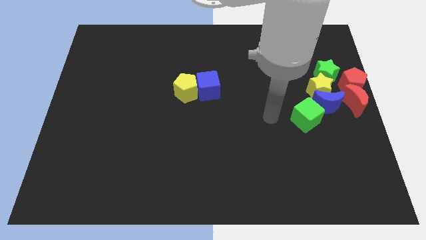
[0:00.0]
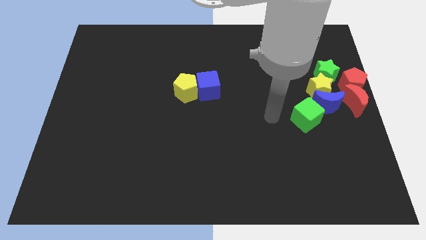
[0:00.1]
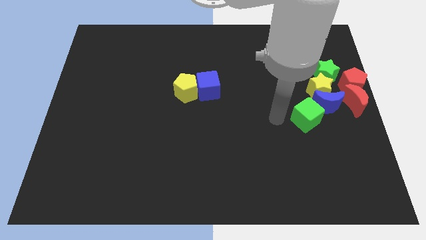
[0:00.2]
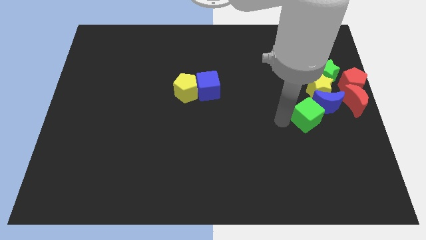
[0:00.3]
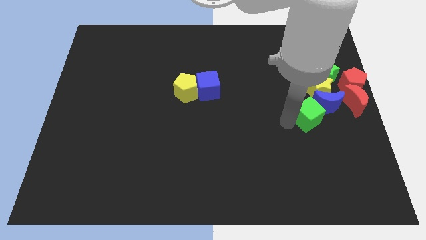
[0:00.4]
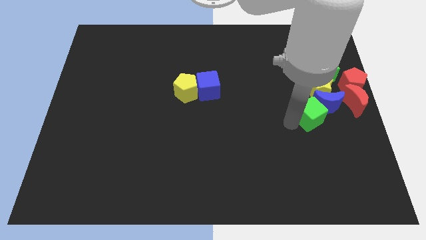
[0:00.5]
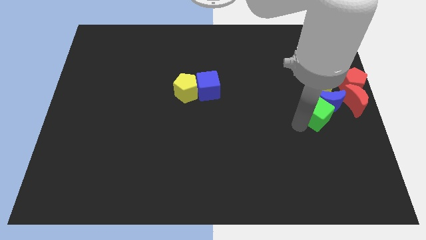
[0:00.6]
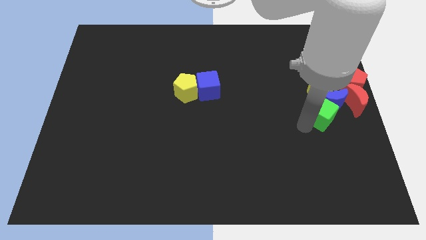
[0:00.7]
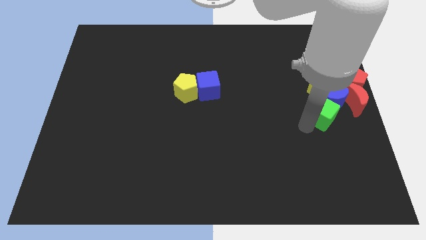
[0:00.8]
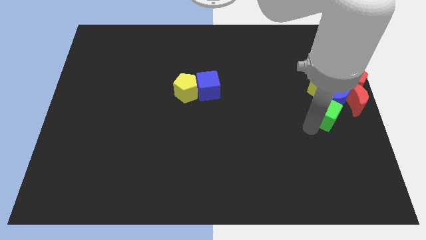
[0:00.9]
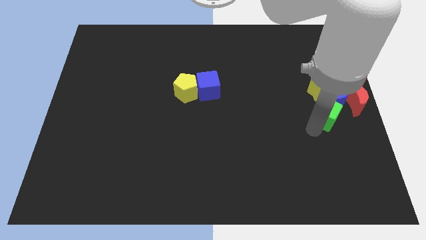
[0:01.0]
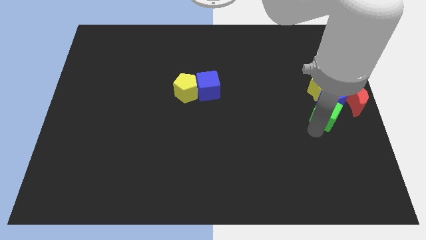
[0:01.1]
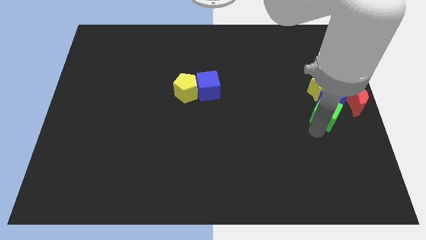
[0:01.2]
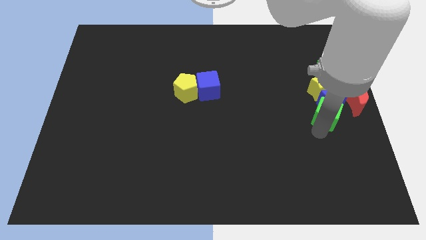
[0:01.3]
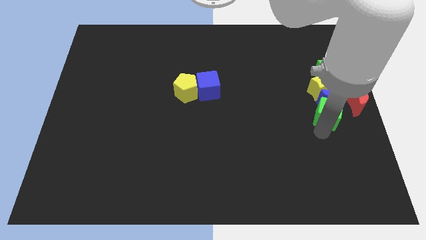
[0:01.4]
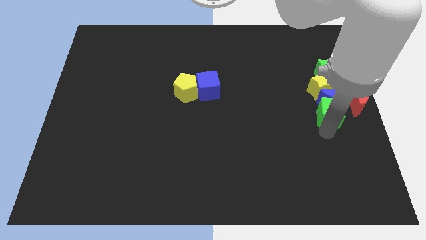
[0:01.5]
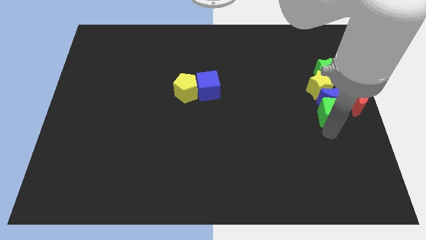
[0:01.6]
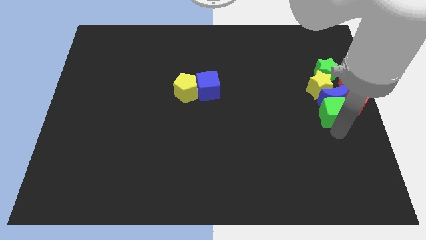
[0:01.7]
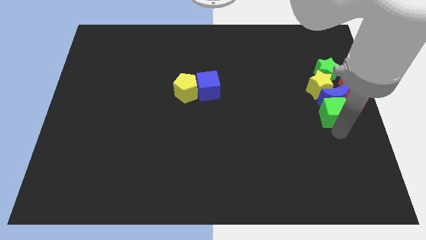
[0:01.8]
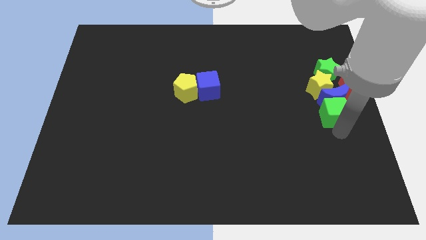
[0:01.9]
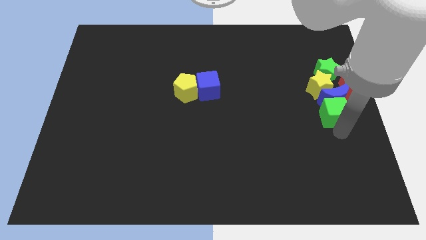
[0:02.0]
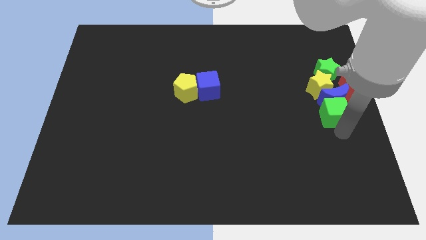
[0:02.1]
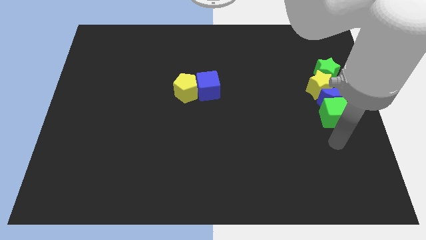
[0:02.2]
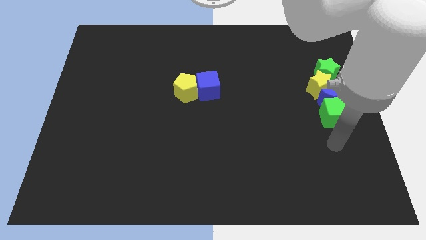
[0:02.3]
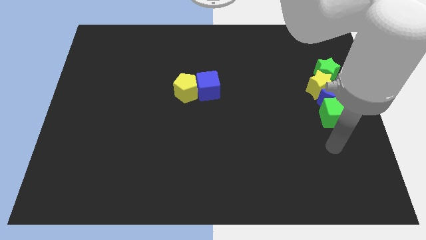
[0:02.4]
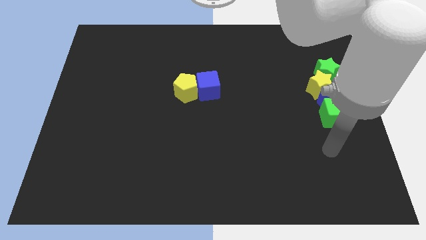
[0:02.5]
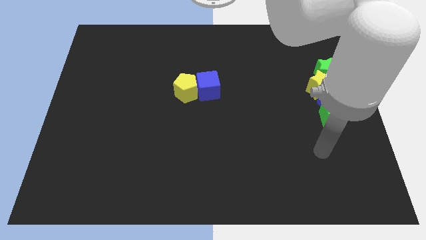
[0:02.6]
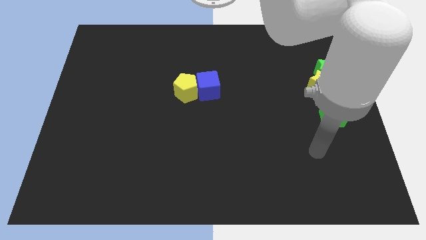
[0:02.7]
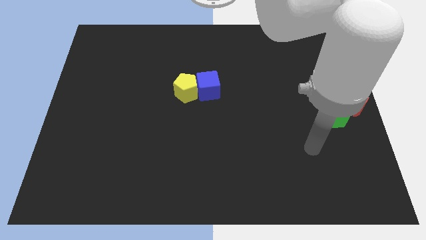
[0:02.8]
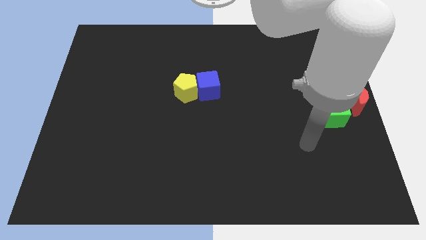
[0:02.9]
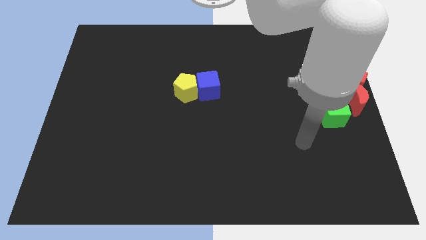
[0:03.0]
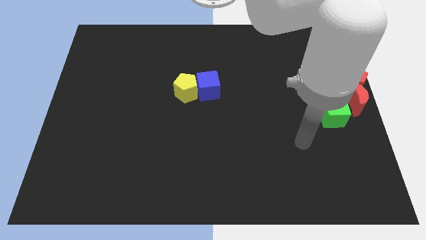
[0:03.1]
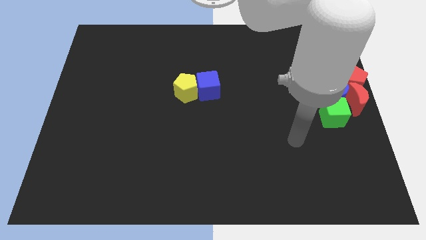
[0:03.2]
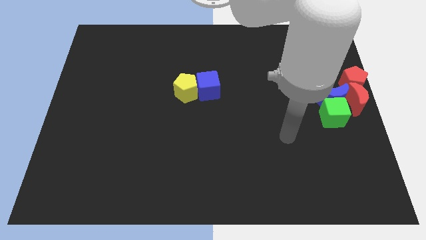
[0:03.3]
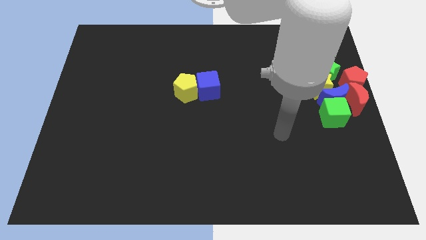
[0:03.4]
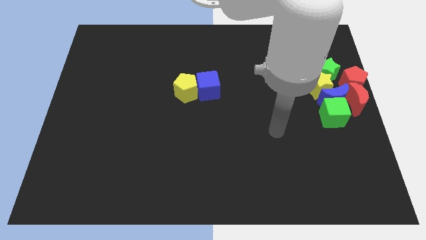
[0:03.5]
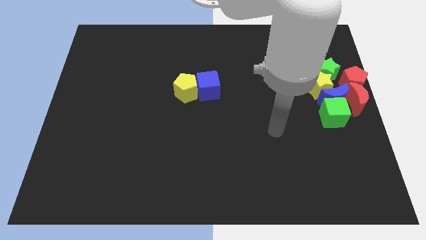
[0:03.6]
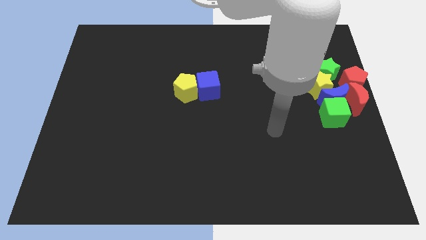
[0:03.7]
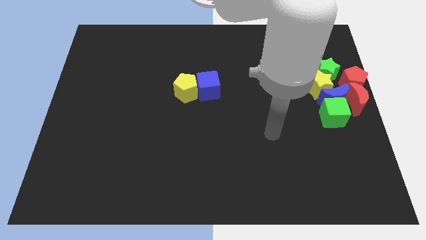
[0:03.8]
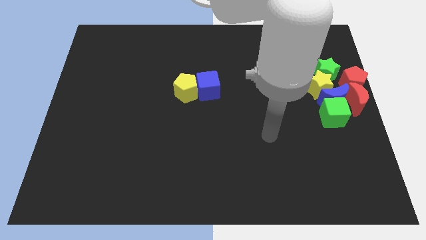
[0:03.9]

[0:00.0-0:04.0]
push the green cube into the group of blocks

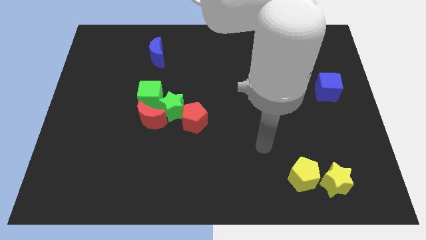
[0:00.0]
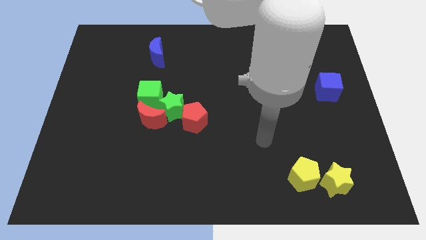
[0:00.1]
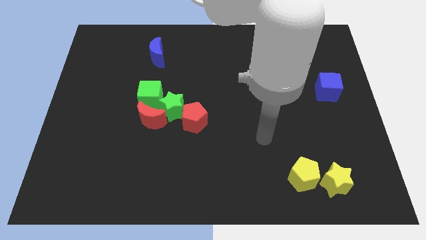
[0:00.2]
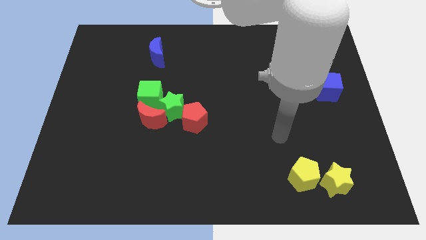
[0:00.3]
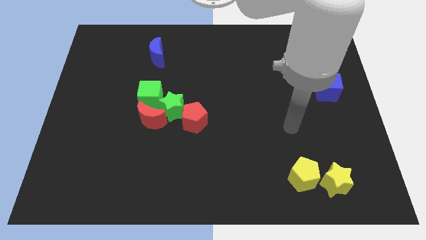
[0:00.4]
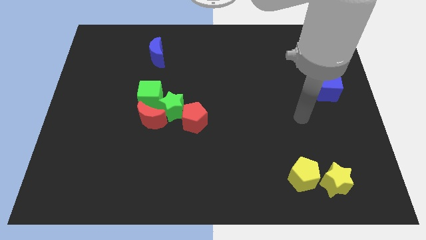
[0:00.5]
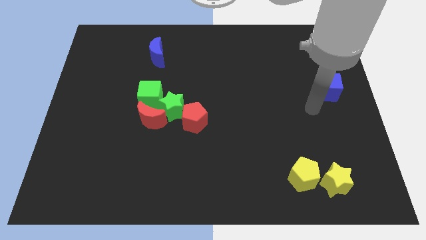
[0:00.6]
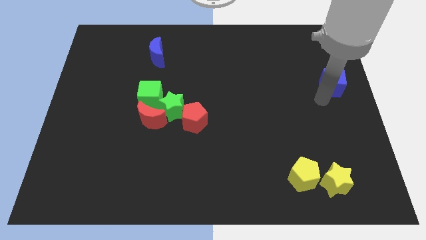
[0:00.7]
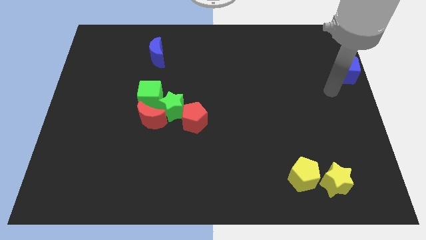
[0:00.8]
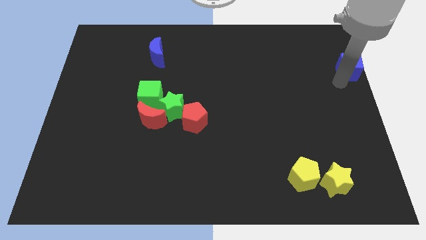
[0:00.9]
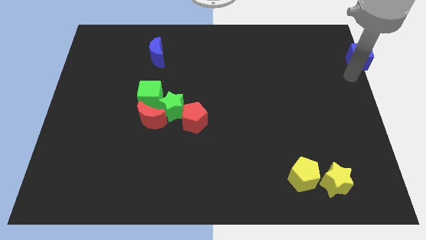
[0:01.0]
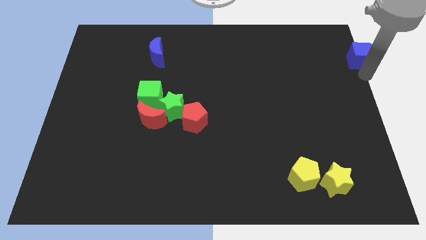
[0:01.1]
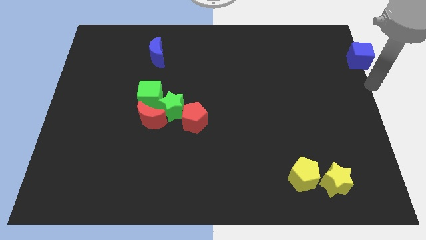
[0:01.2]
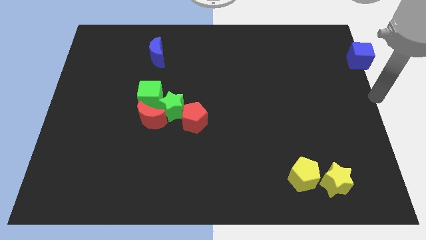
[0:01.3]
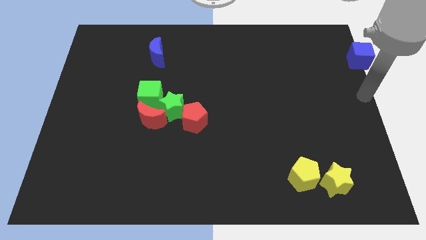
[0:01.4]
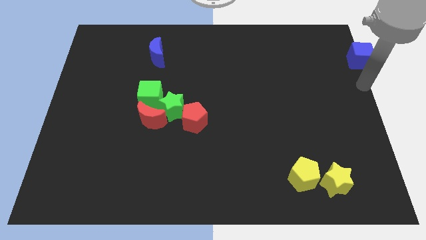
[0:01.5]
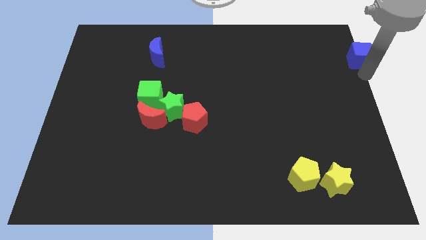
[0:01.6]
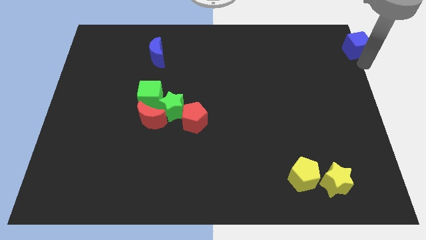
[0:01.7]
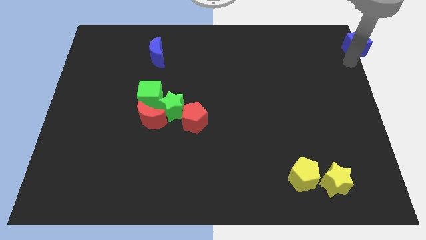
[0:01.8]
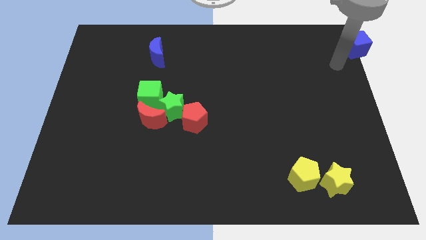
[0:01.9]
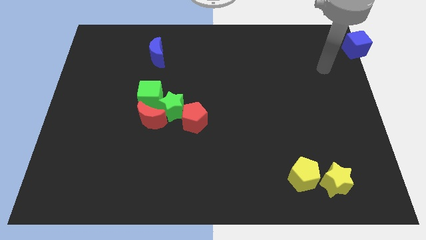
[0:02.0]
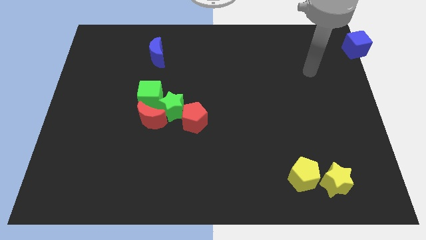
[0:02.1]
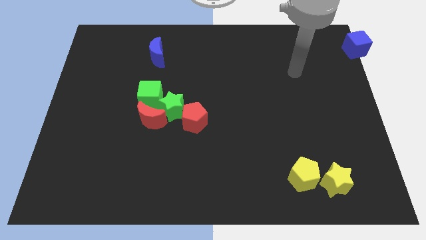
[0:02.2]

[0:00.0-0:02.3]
move the blue cube towards the top right side of the board

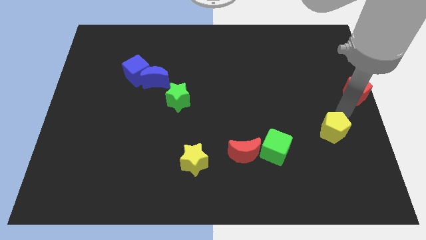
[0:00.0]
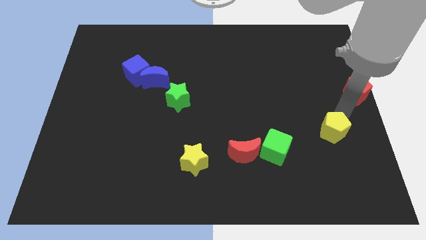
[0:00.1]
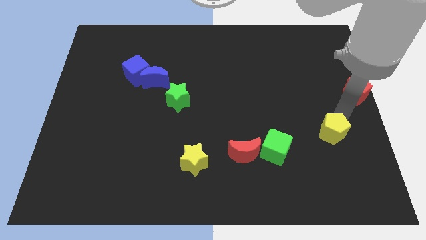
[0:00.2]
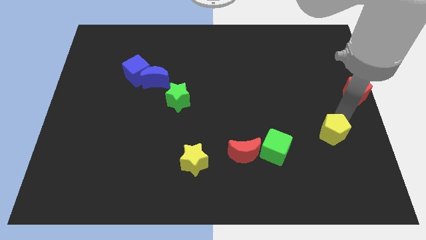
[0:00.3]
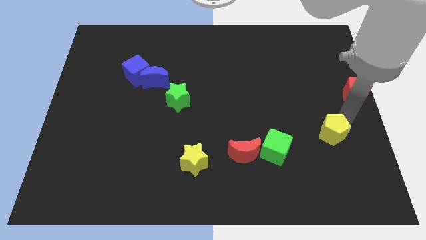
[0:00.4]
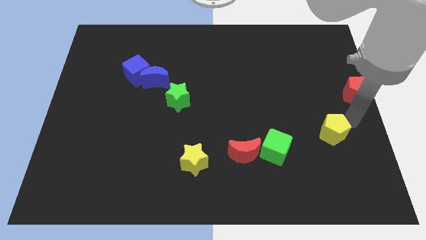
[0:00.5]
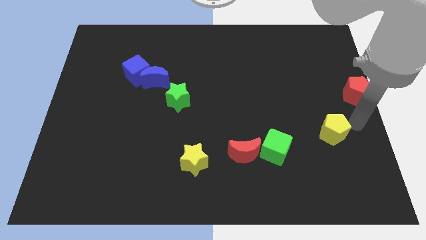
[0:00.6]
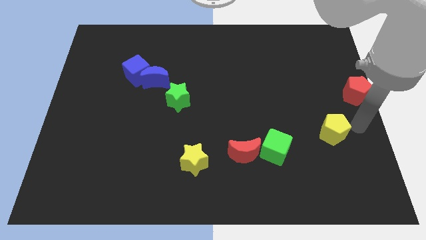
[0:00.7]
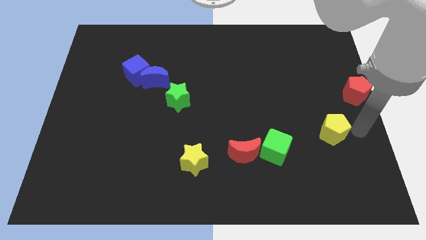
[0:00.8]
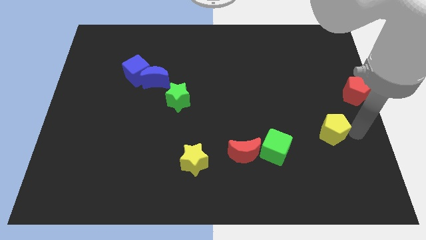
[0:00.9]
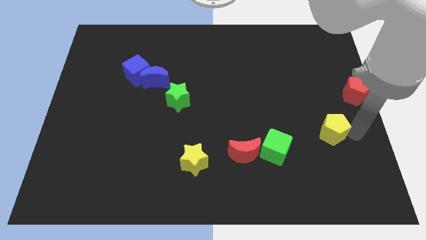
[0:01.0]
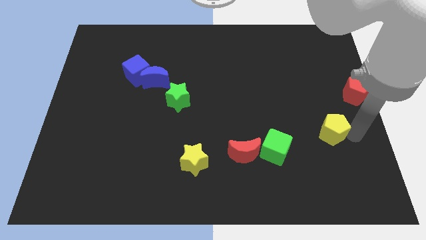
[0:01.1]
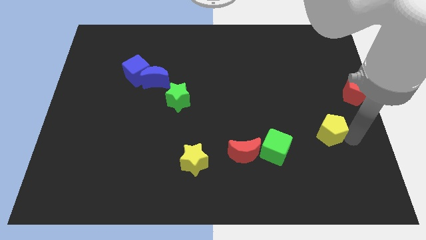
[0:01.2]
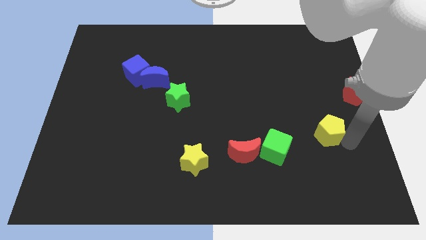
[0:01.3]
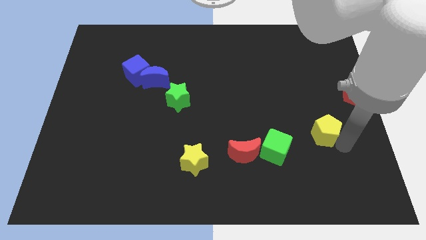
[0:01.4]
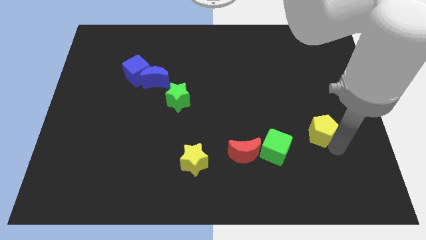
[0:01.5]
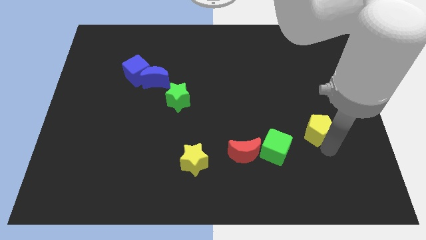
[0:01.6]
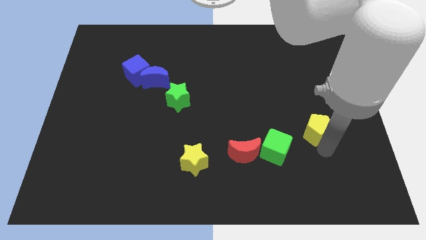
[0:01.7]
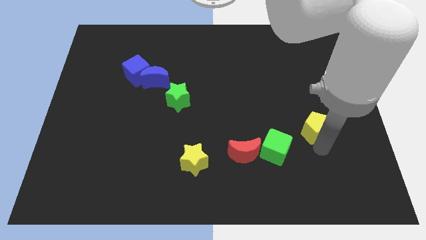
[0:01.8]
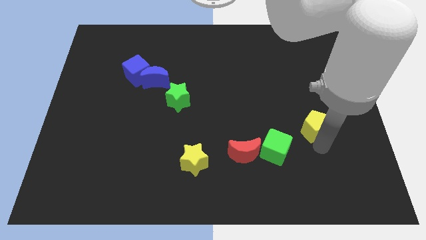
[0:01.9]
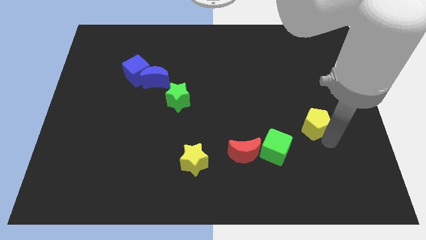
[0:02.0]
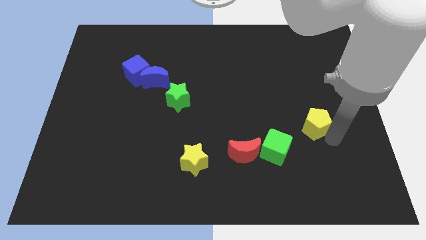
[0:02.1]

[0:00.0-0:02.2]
move the yellow pentagon slightly to the left

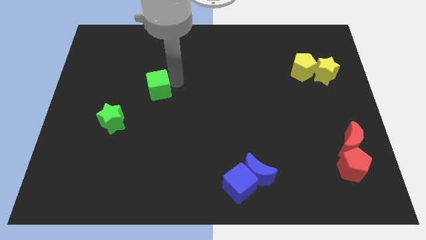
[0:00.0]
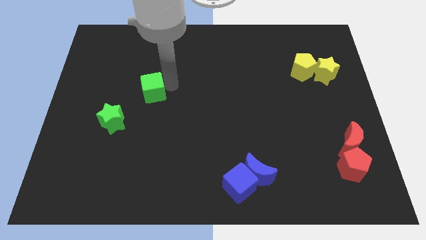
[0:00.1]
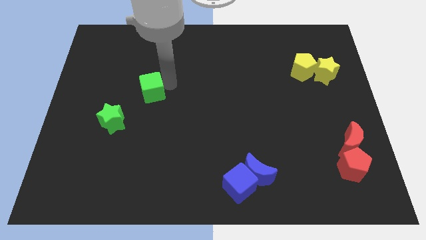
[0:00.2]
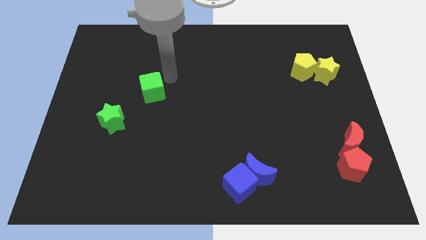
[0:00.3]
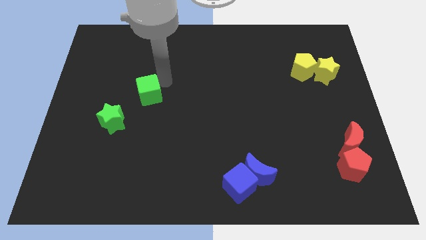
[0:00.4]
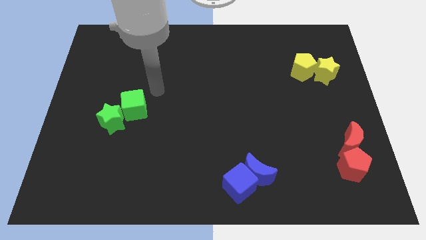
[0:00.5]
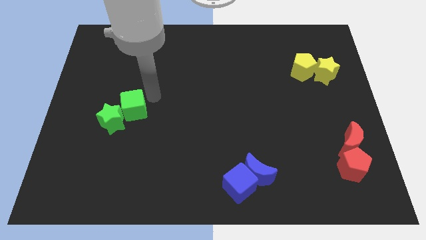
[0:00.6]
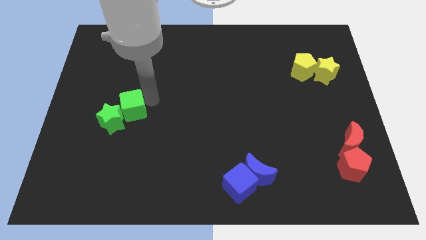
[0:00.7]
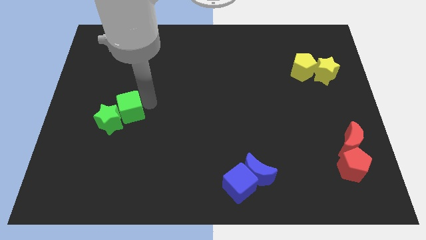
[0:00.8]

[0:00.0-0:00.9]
move the green cube to the right of the green star
